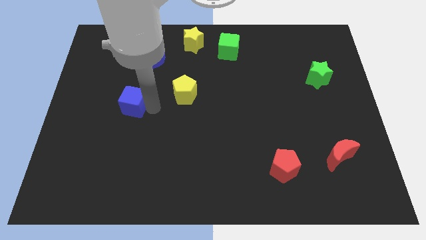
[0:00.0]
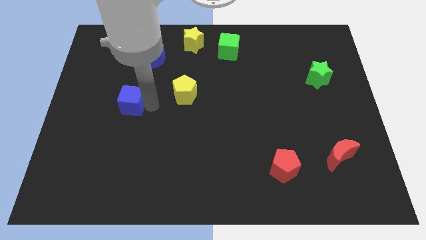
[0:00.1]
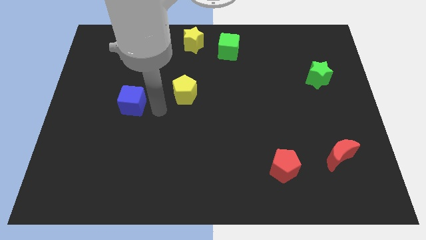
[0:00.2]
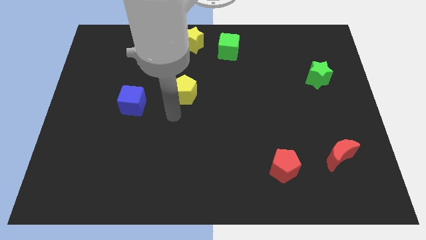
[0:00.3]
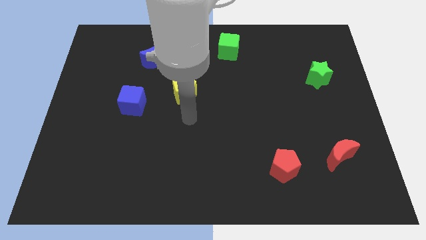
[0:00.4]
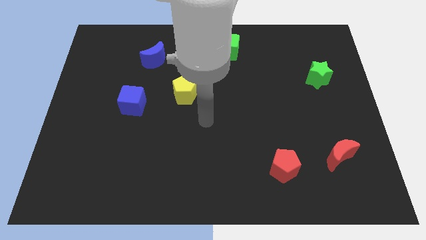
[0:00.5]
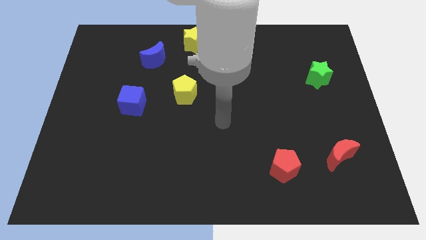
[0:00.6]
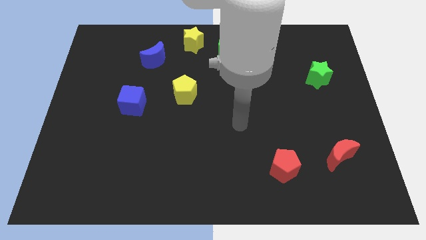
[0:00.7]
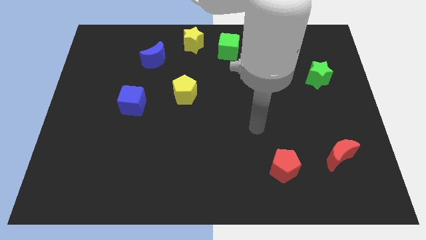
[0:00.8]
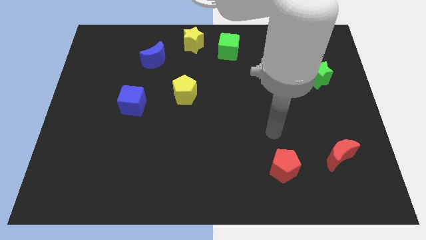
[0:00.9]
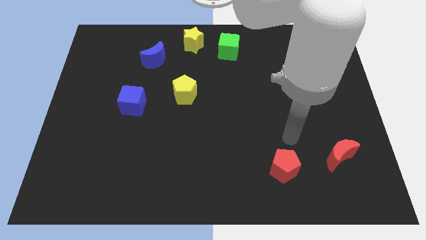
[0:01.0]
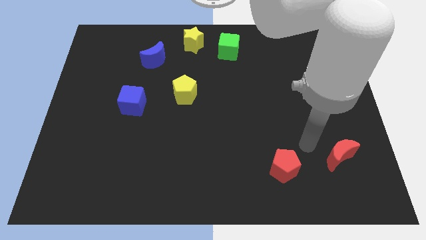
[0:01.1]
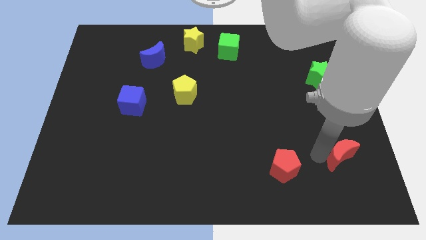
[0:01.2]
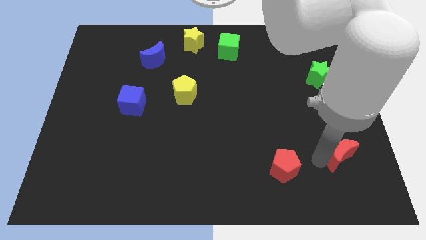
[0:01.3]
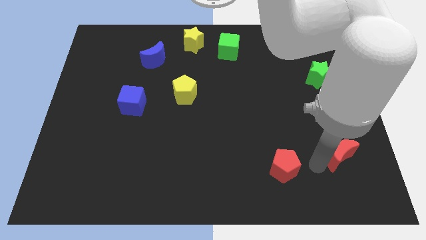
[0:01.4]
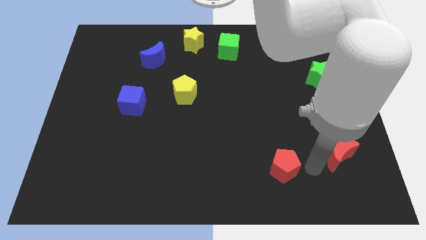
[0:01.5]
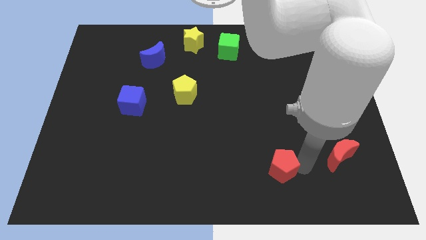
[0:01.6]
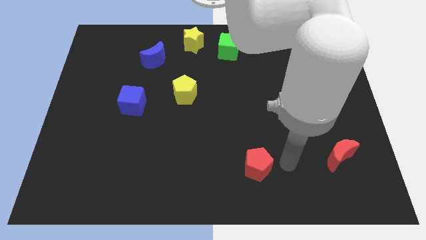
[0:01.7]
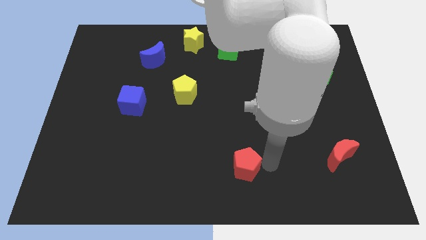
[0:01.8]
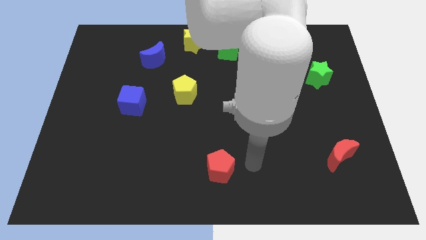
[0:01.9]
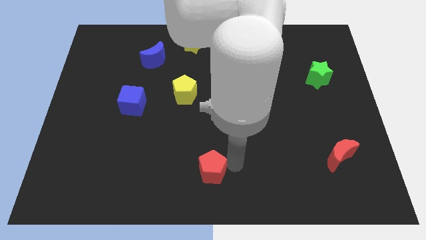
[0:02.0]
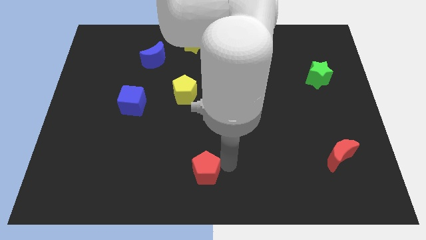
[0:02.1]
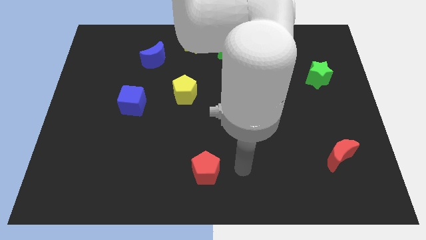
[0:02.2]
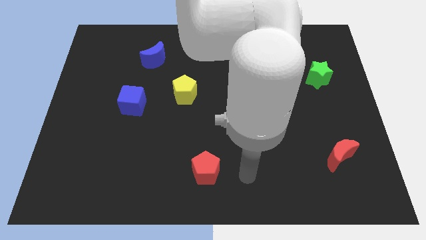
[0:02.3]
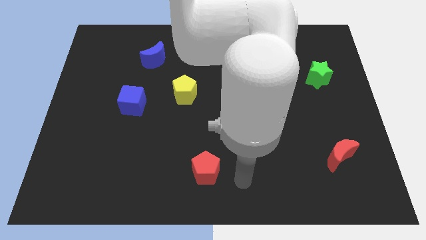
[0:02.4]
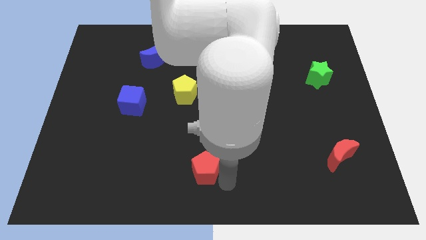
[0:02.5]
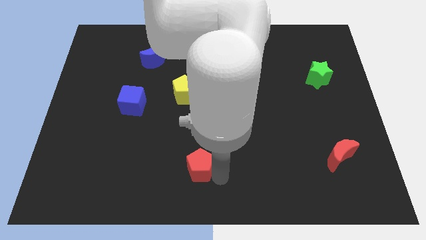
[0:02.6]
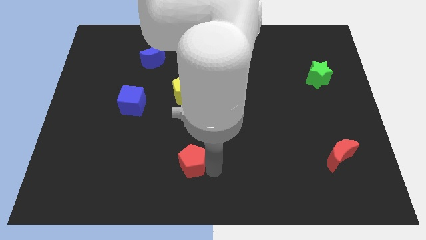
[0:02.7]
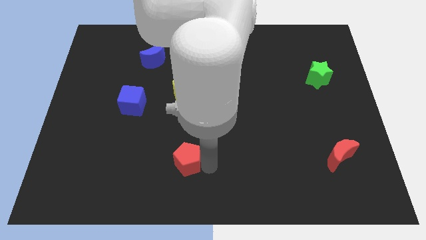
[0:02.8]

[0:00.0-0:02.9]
move the red pentgaon below the yellow pentagon

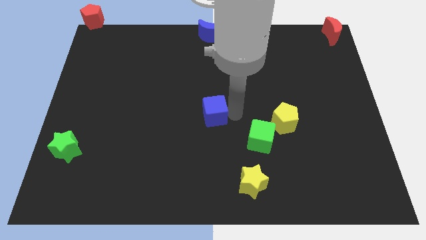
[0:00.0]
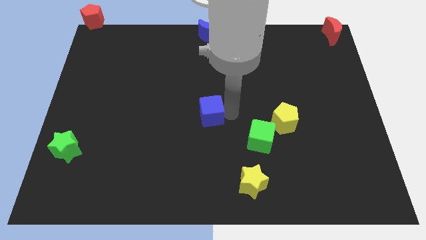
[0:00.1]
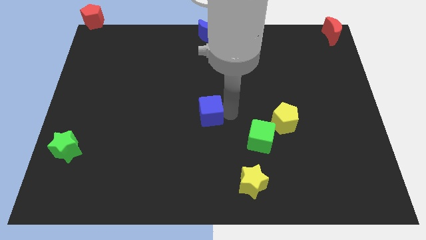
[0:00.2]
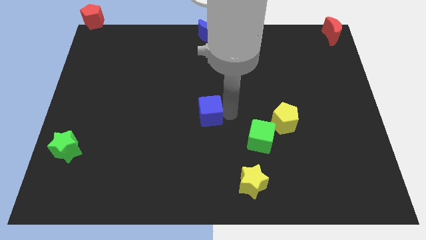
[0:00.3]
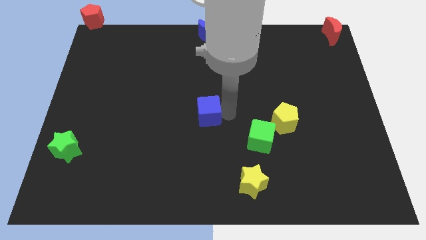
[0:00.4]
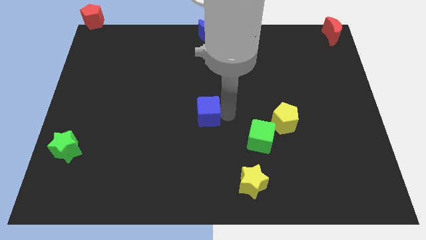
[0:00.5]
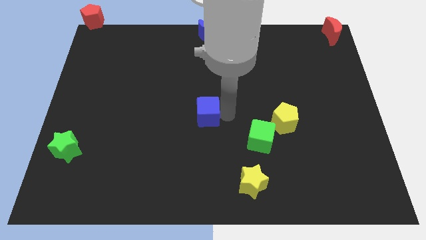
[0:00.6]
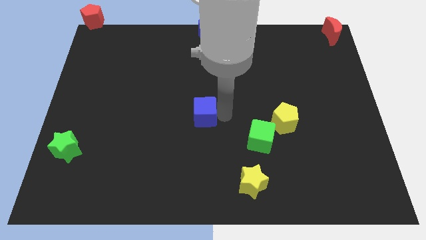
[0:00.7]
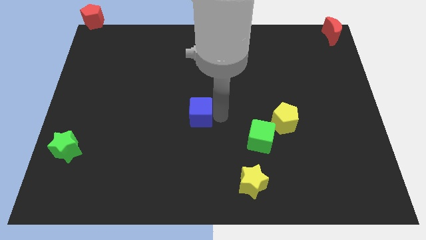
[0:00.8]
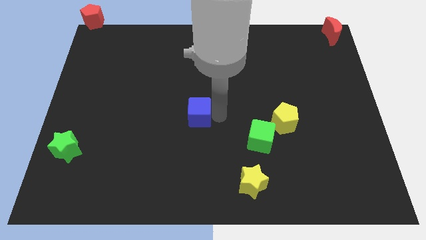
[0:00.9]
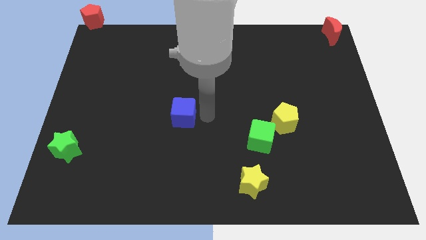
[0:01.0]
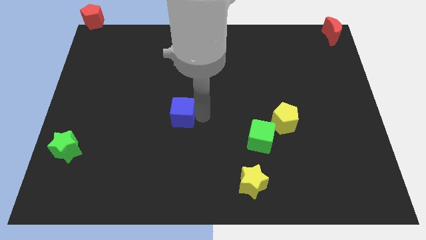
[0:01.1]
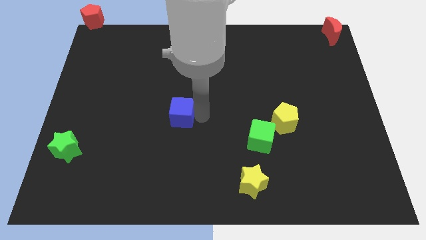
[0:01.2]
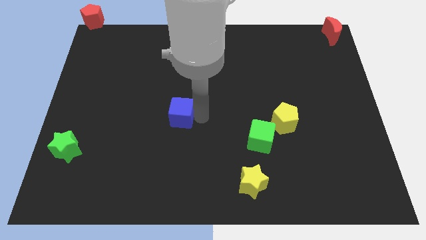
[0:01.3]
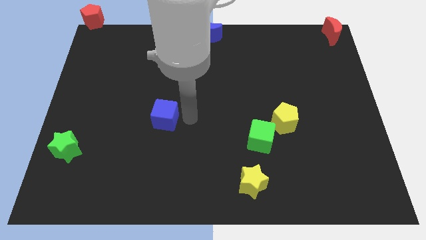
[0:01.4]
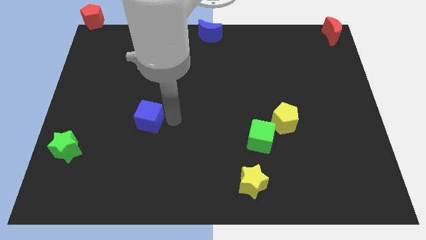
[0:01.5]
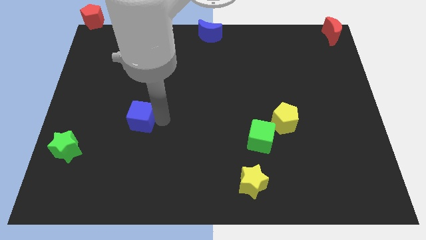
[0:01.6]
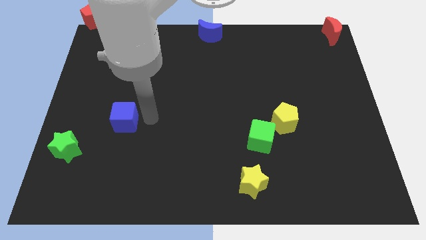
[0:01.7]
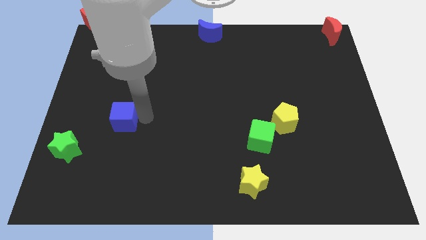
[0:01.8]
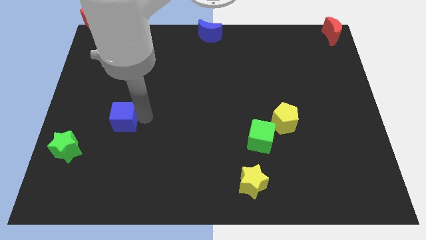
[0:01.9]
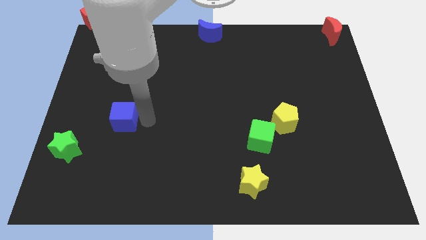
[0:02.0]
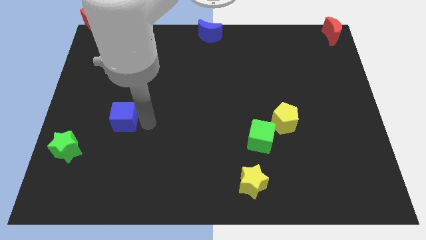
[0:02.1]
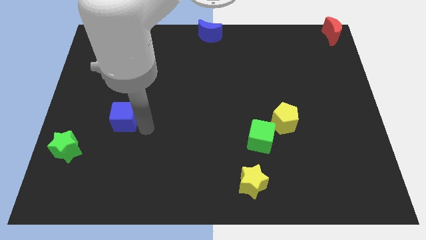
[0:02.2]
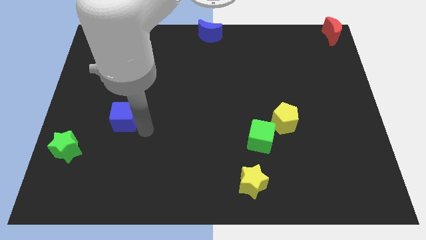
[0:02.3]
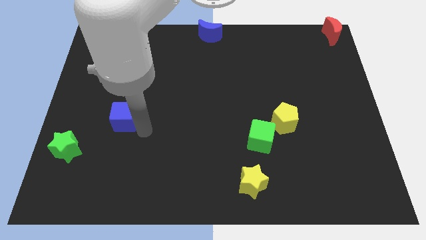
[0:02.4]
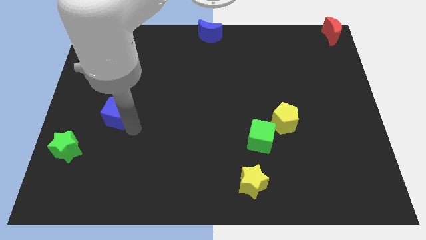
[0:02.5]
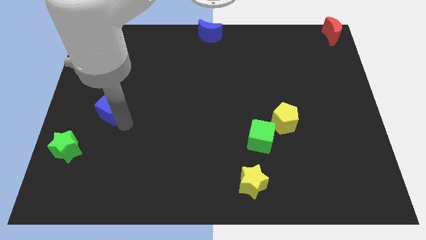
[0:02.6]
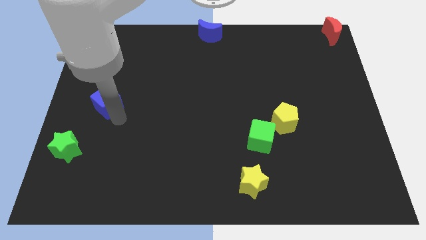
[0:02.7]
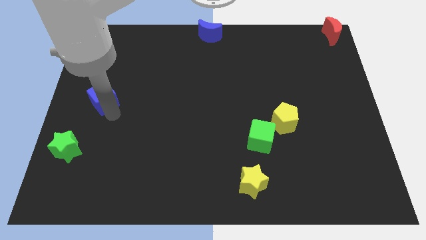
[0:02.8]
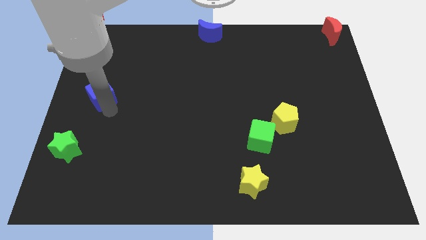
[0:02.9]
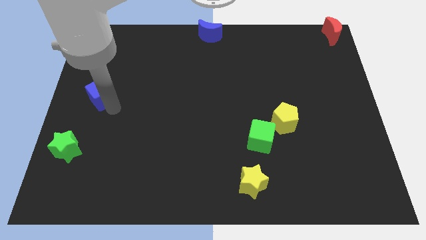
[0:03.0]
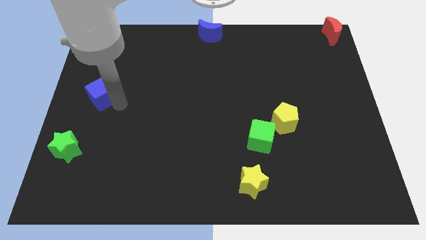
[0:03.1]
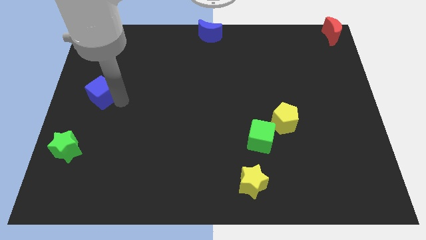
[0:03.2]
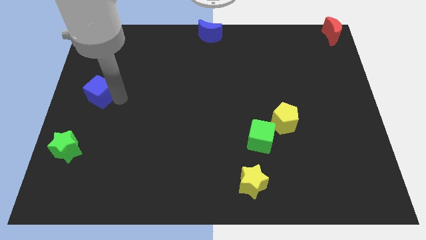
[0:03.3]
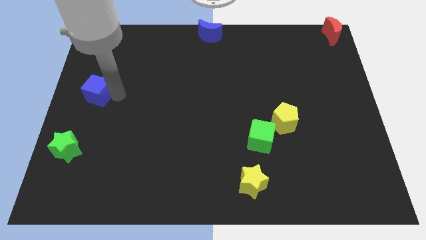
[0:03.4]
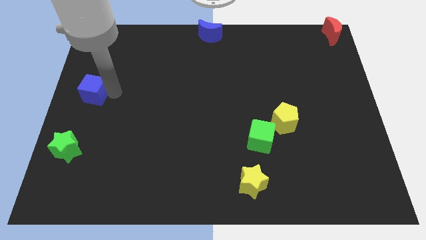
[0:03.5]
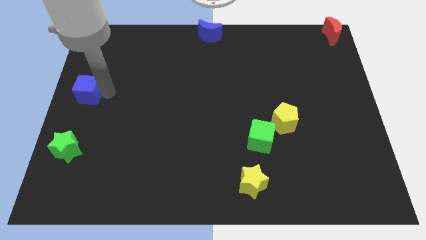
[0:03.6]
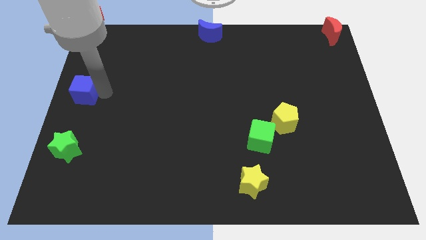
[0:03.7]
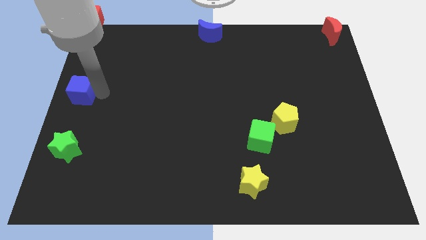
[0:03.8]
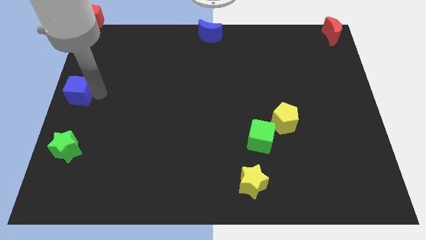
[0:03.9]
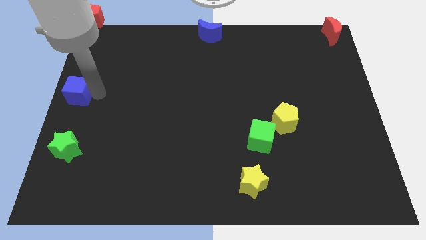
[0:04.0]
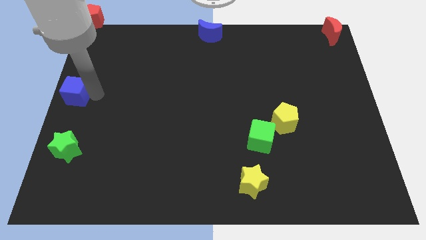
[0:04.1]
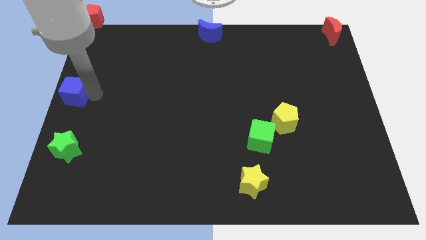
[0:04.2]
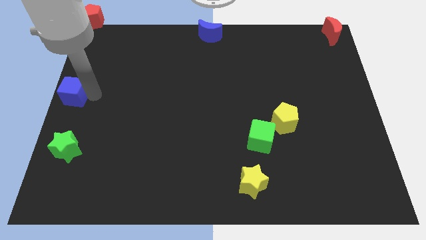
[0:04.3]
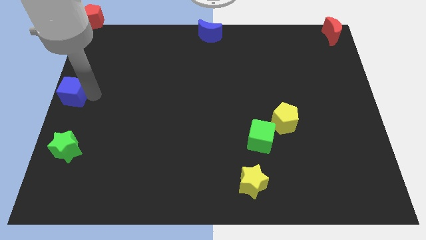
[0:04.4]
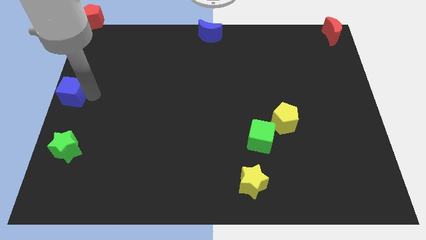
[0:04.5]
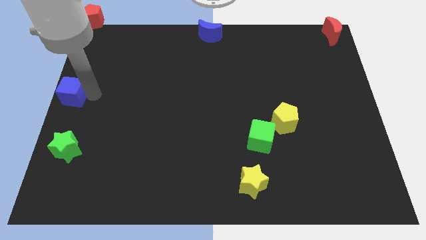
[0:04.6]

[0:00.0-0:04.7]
place blue cube above green star

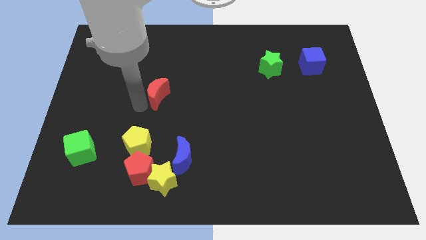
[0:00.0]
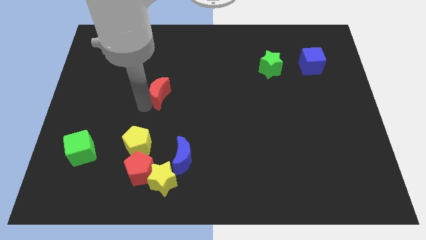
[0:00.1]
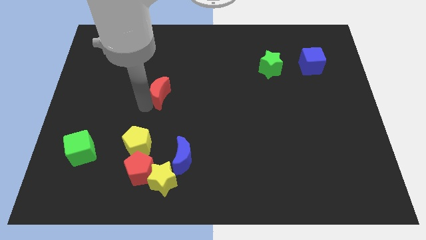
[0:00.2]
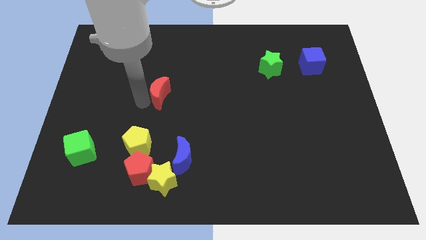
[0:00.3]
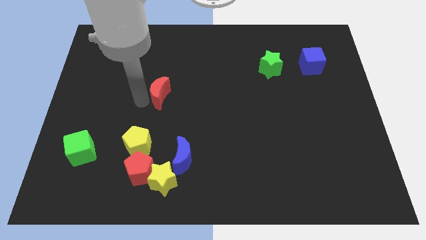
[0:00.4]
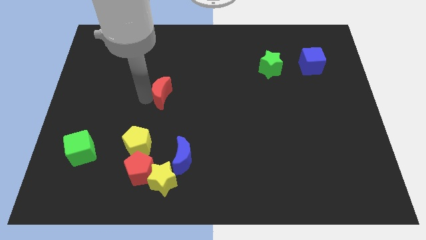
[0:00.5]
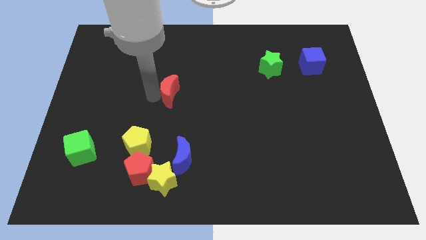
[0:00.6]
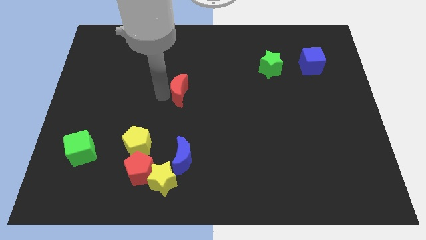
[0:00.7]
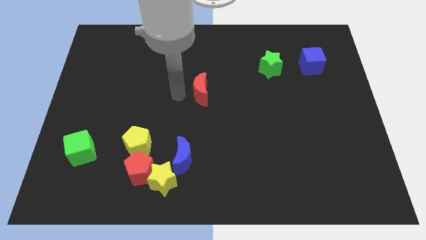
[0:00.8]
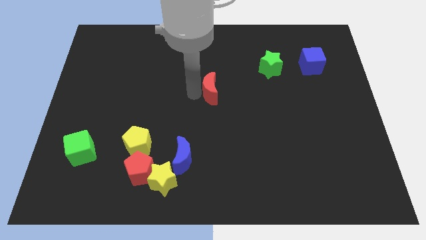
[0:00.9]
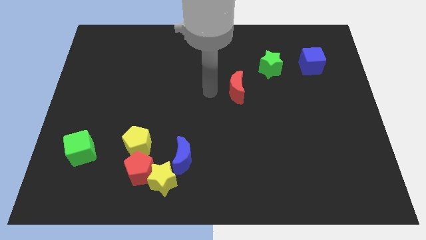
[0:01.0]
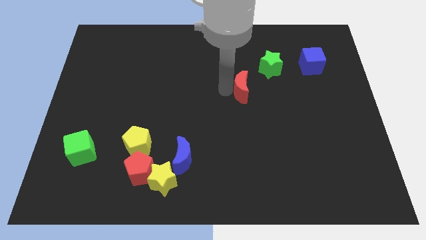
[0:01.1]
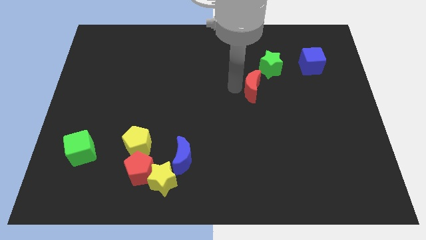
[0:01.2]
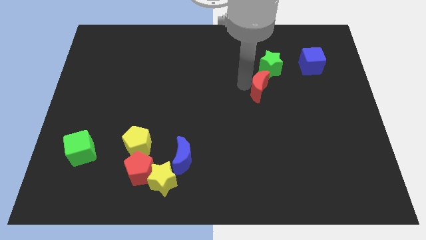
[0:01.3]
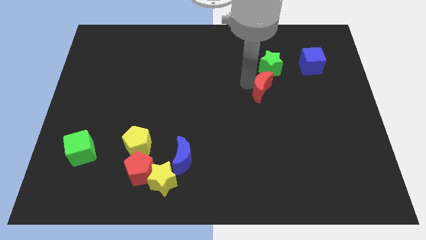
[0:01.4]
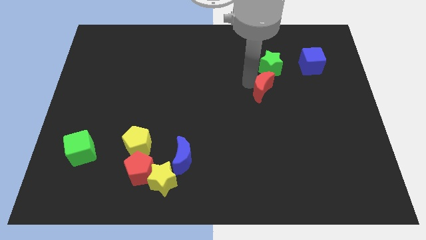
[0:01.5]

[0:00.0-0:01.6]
place the red crescent below the green star
